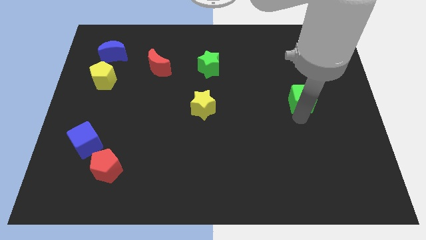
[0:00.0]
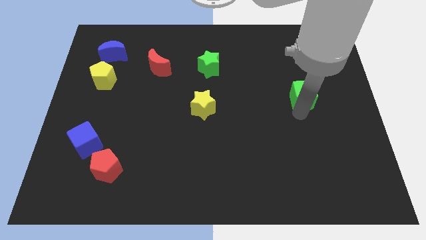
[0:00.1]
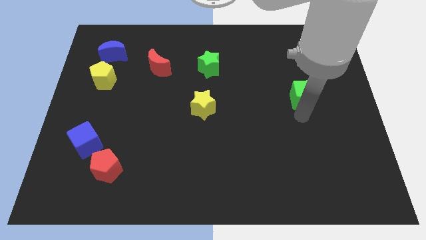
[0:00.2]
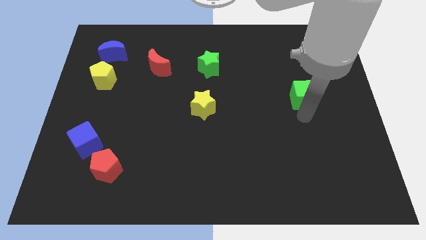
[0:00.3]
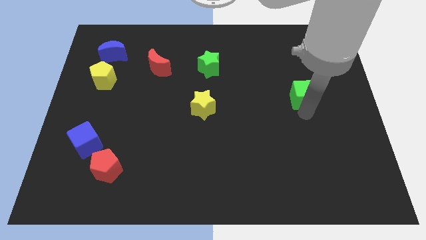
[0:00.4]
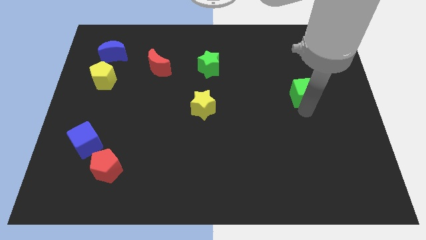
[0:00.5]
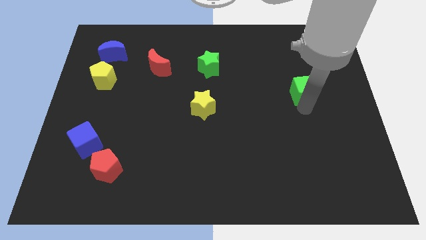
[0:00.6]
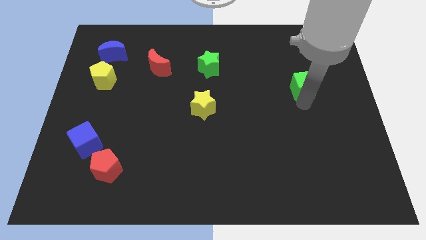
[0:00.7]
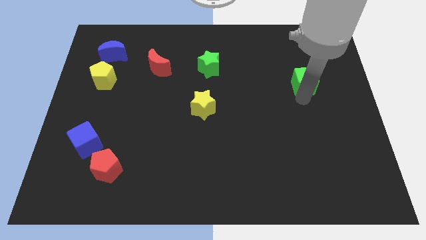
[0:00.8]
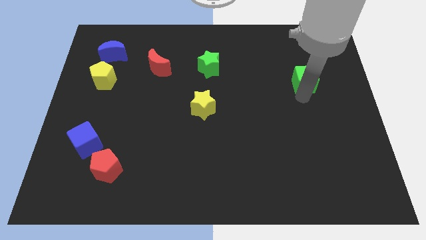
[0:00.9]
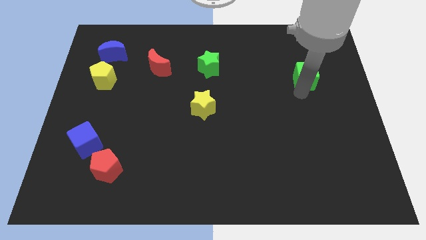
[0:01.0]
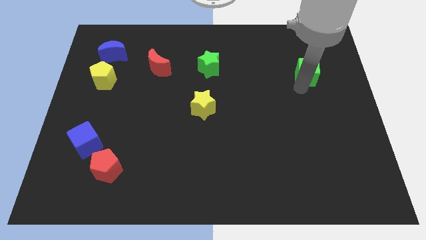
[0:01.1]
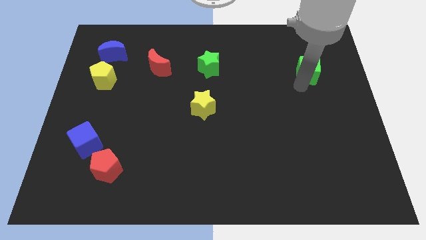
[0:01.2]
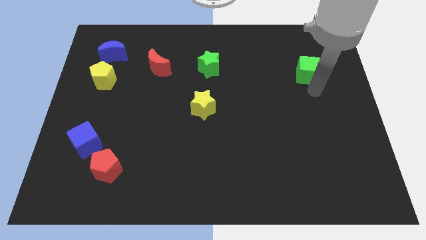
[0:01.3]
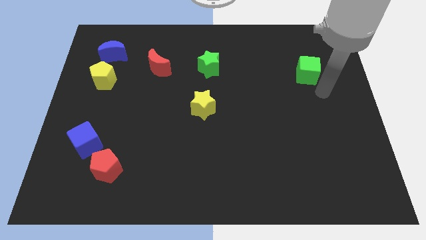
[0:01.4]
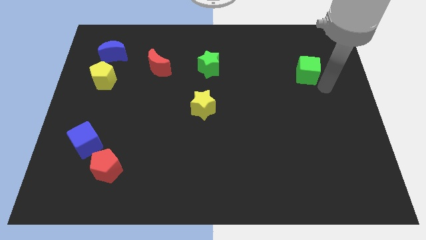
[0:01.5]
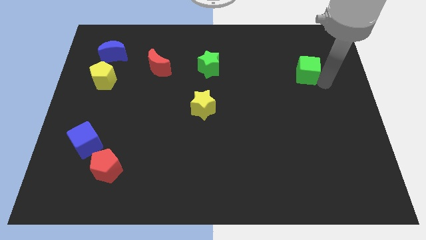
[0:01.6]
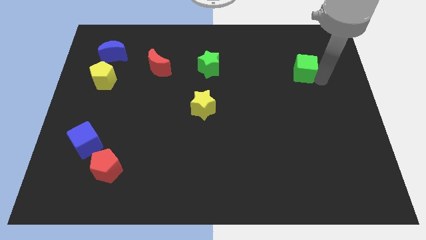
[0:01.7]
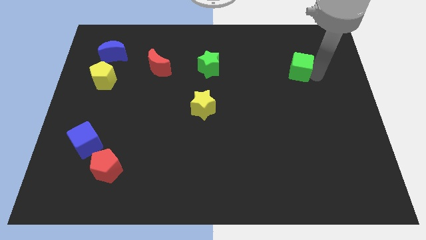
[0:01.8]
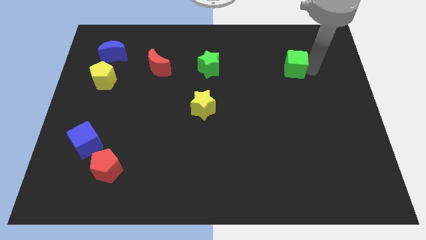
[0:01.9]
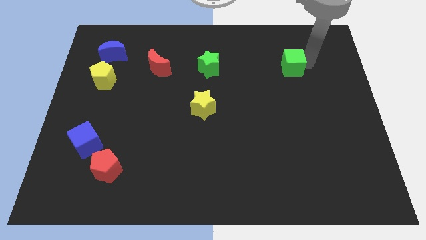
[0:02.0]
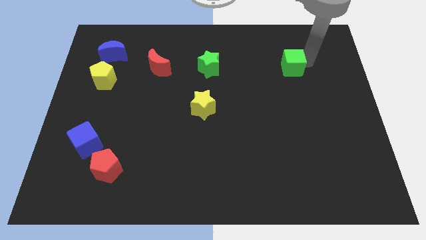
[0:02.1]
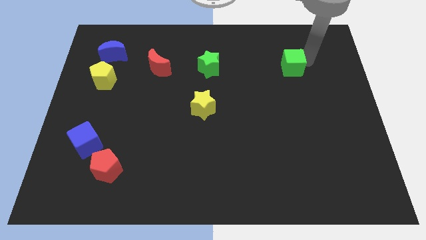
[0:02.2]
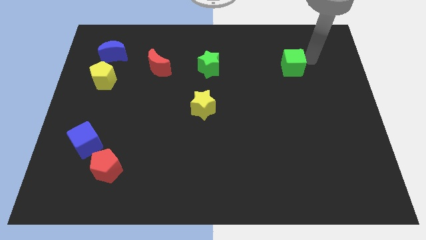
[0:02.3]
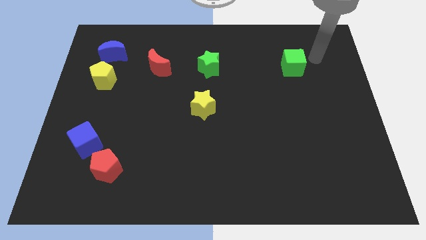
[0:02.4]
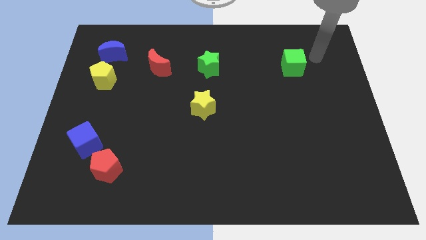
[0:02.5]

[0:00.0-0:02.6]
move the green cube to the horizontal right of the green star

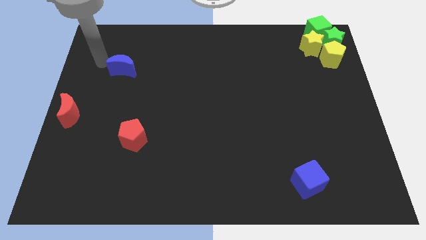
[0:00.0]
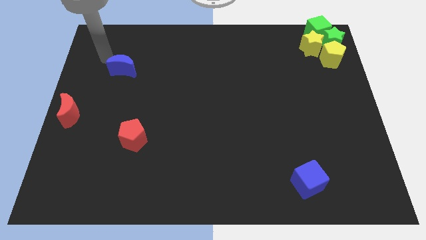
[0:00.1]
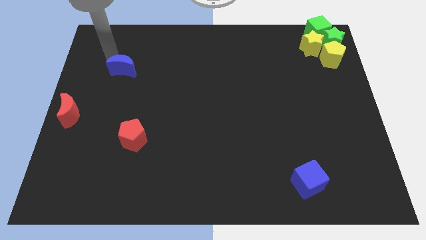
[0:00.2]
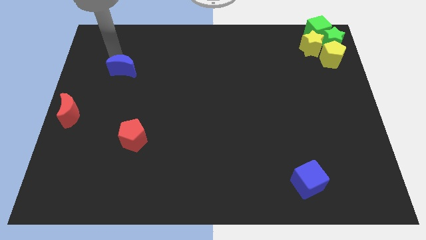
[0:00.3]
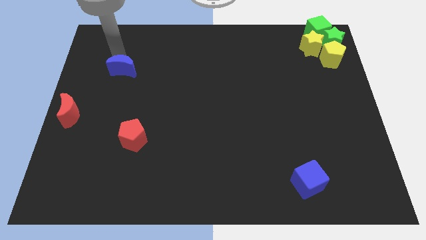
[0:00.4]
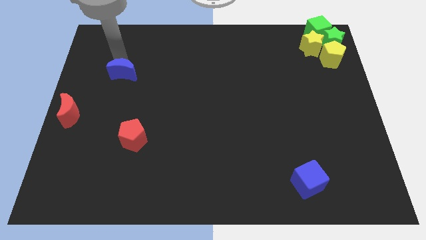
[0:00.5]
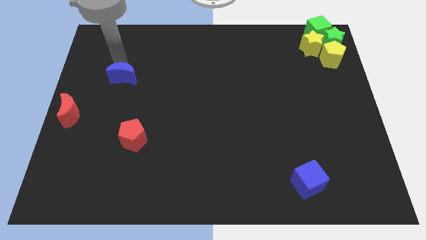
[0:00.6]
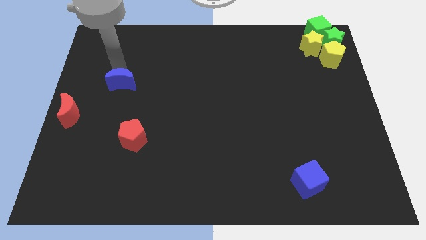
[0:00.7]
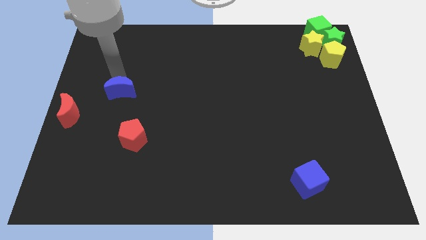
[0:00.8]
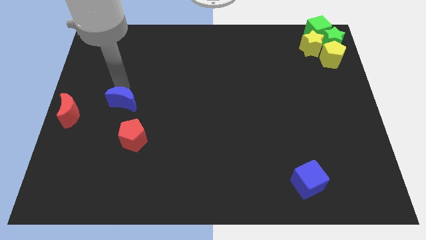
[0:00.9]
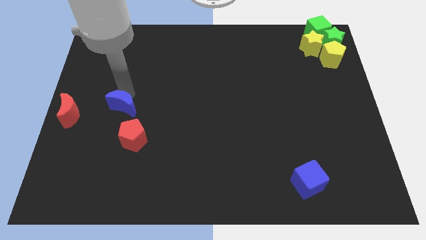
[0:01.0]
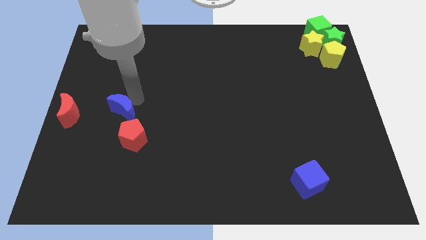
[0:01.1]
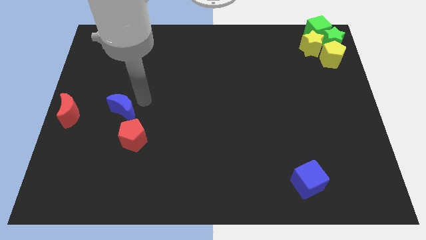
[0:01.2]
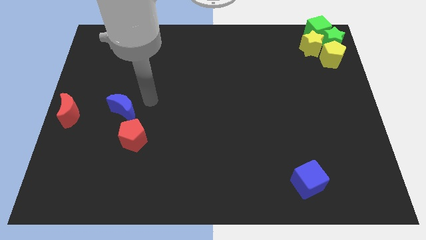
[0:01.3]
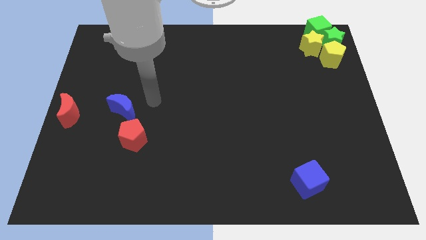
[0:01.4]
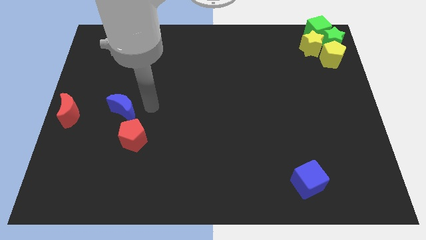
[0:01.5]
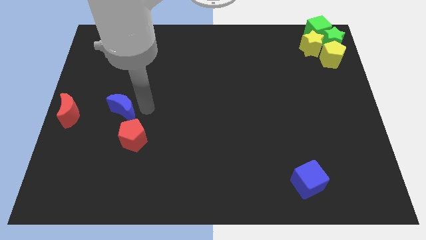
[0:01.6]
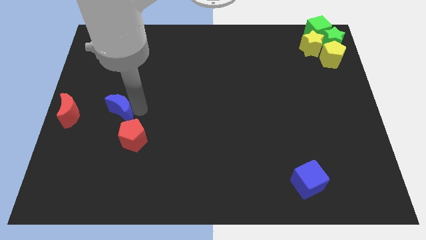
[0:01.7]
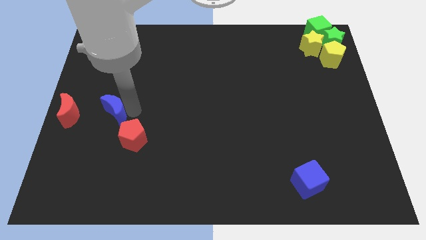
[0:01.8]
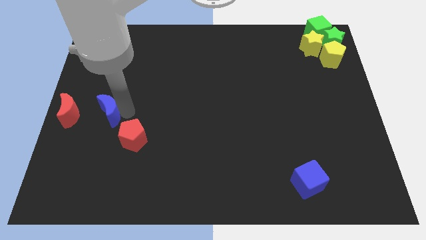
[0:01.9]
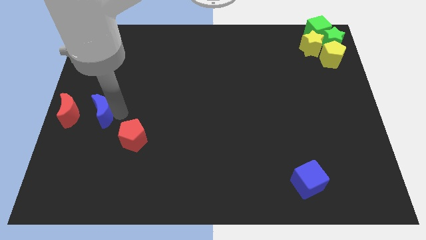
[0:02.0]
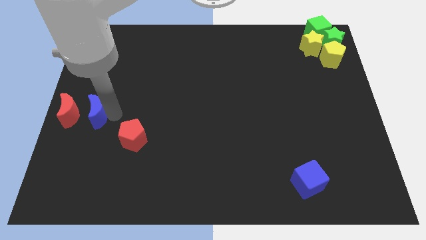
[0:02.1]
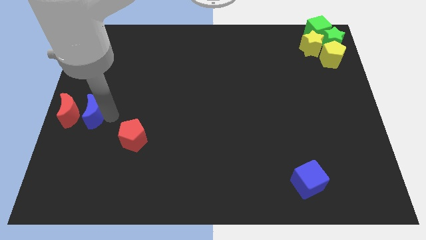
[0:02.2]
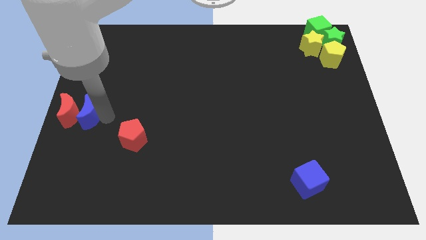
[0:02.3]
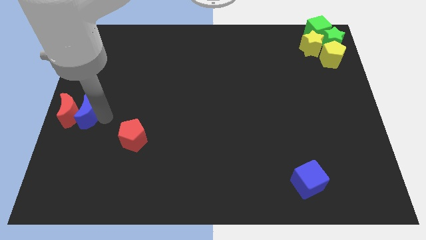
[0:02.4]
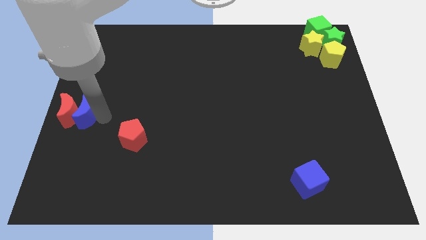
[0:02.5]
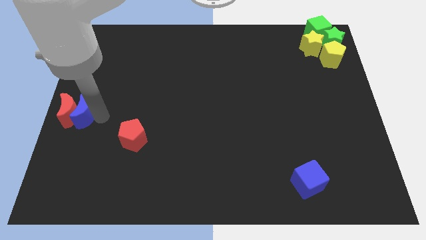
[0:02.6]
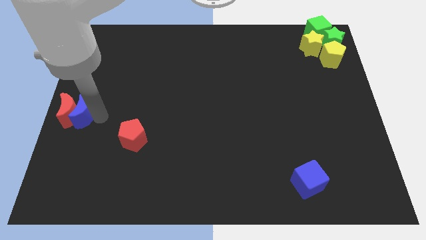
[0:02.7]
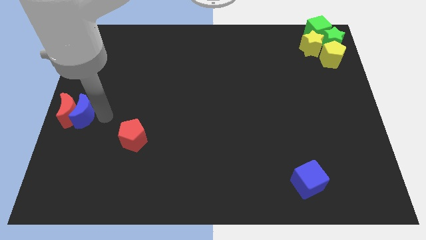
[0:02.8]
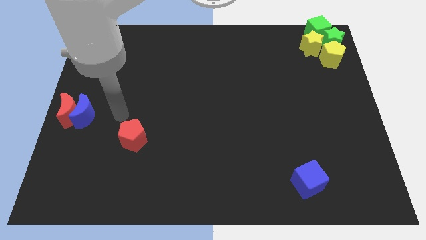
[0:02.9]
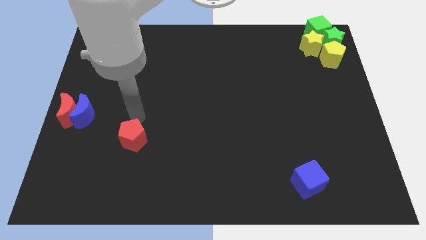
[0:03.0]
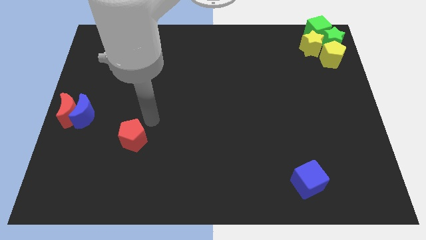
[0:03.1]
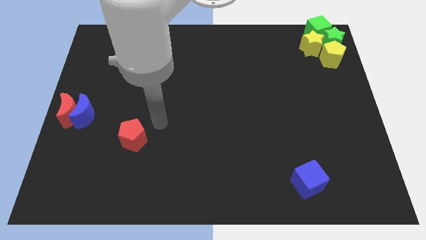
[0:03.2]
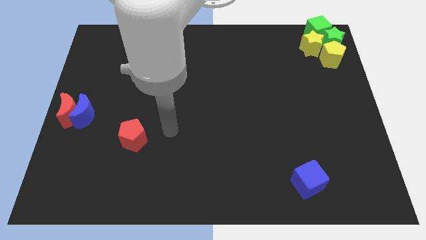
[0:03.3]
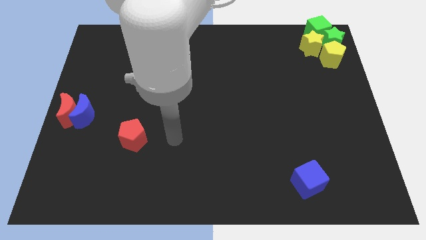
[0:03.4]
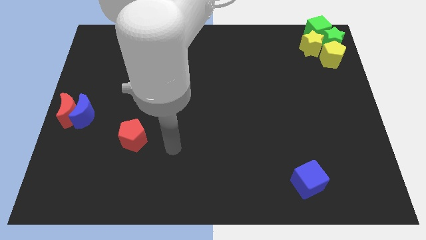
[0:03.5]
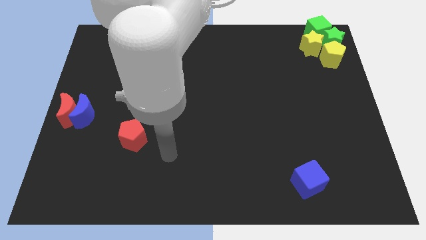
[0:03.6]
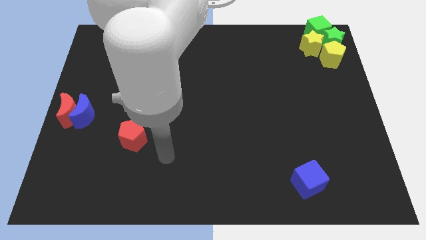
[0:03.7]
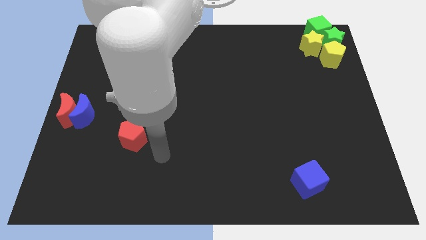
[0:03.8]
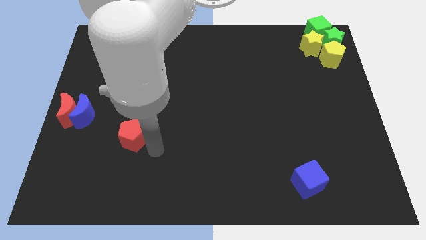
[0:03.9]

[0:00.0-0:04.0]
place blue crescent beside the red crescent

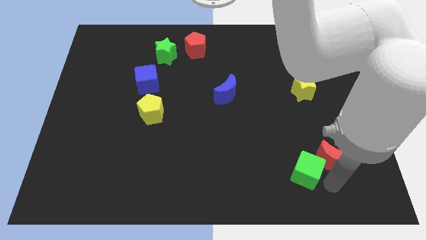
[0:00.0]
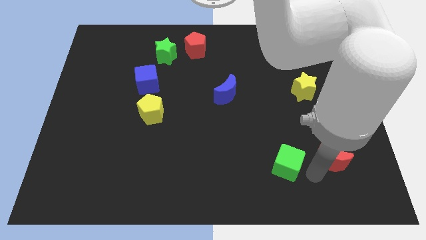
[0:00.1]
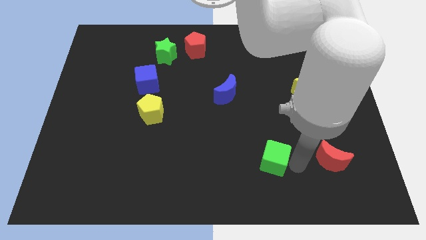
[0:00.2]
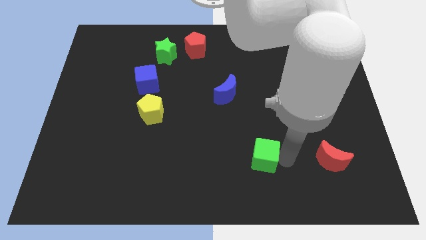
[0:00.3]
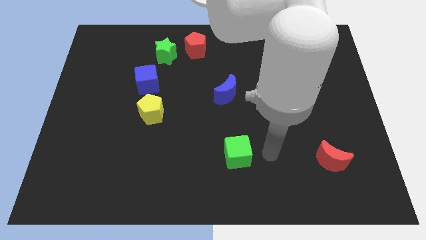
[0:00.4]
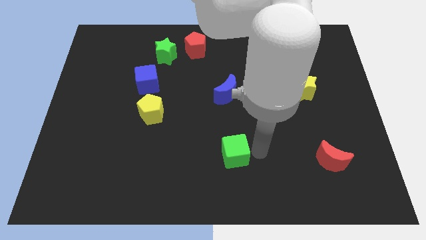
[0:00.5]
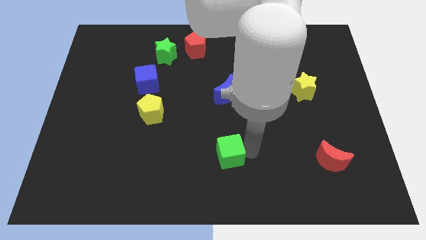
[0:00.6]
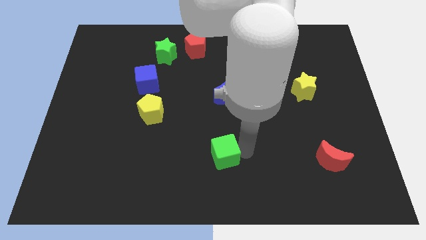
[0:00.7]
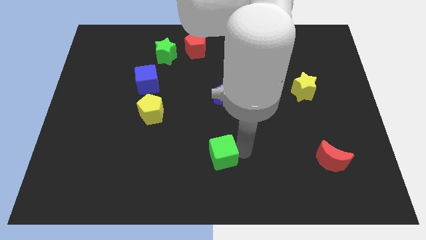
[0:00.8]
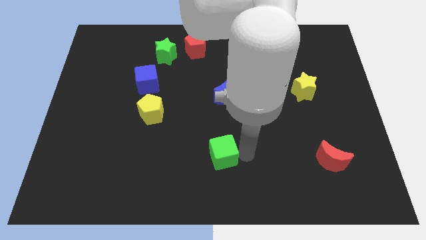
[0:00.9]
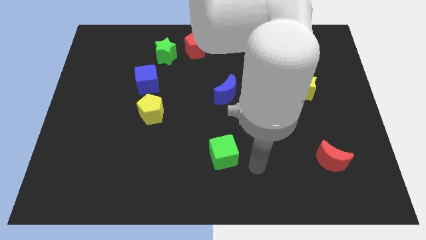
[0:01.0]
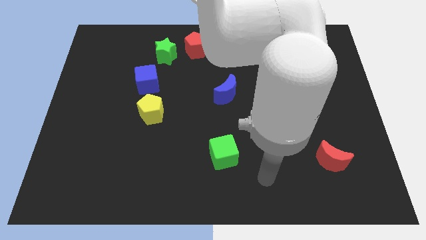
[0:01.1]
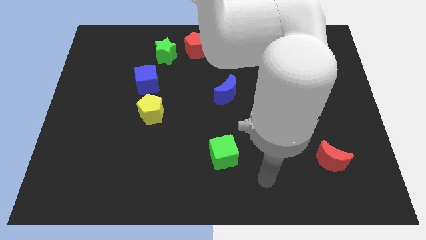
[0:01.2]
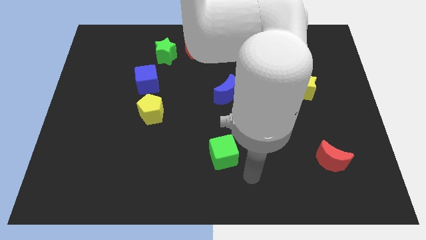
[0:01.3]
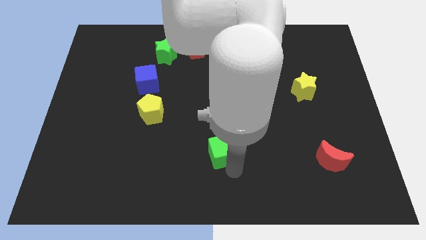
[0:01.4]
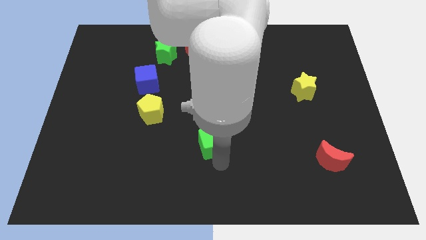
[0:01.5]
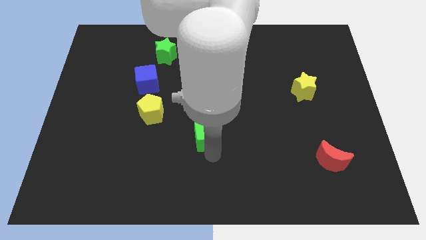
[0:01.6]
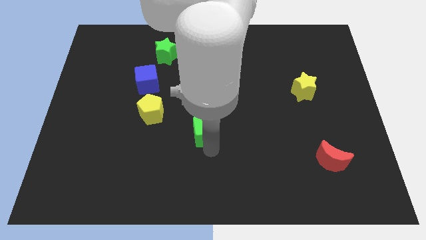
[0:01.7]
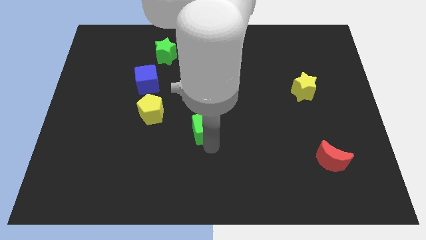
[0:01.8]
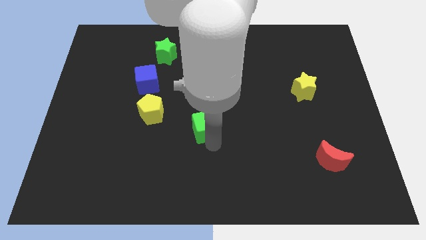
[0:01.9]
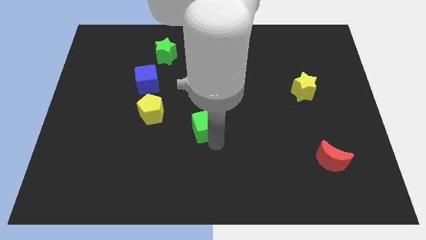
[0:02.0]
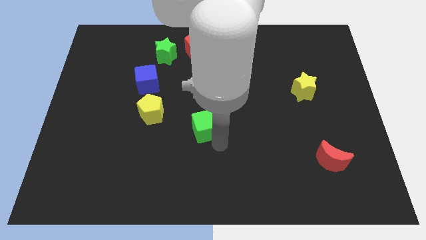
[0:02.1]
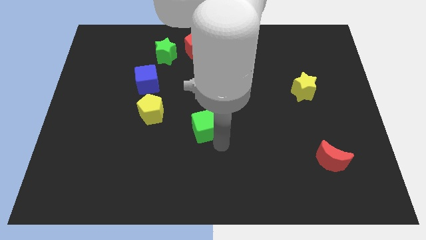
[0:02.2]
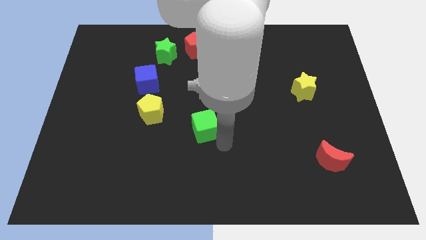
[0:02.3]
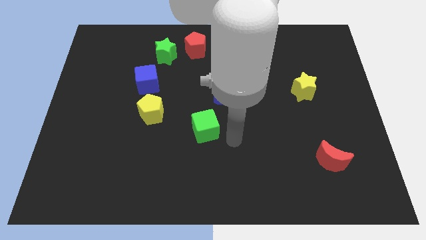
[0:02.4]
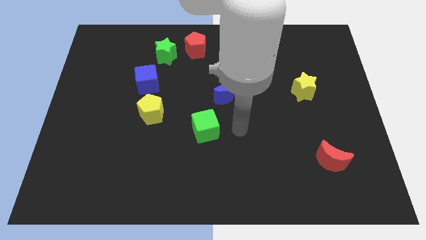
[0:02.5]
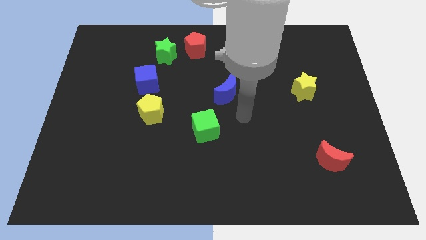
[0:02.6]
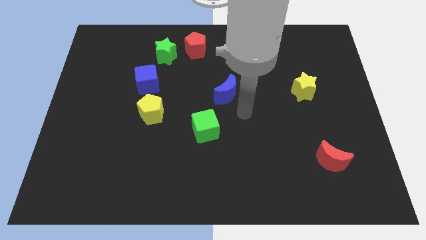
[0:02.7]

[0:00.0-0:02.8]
place green cube diagonally right below yellow pentagon
